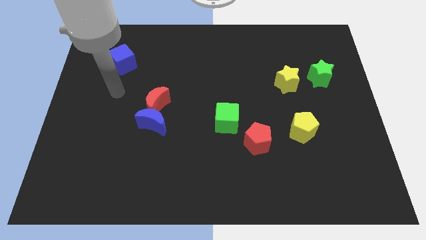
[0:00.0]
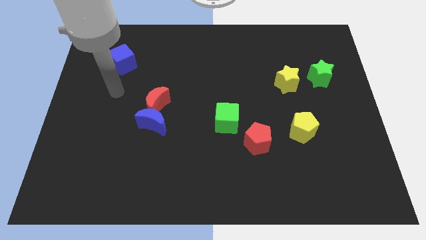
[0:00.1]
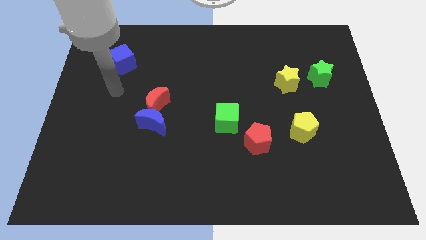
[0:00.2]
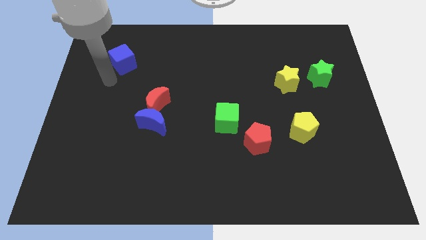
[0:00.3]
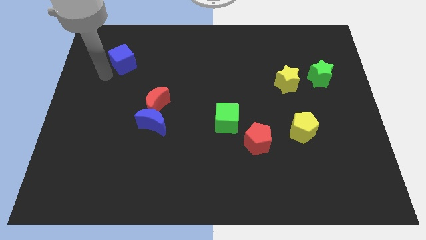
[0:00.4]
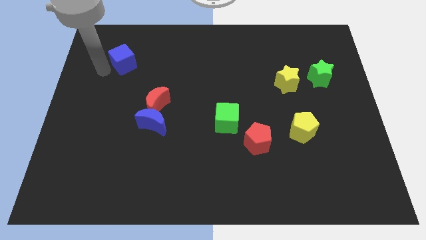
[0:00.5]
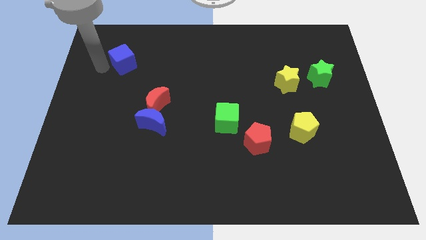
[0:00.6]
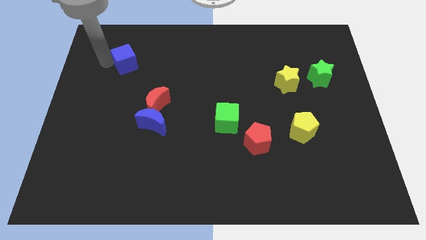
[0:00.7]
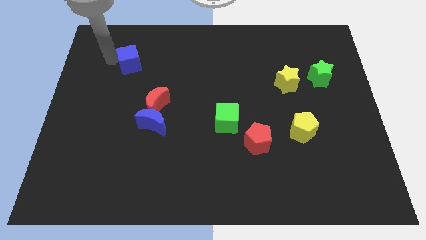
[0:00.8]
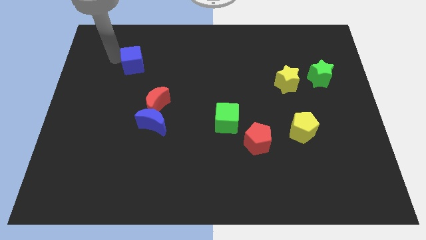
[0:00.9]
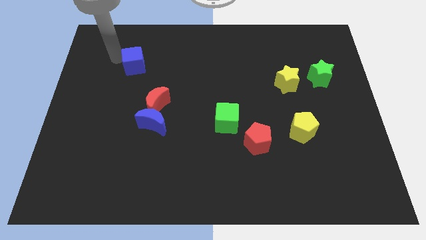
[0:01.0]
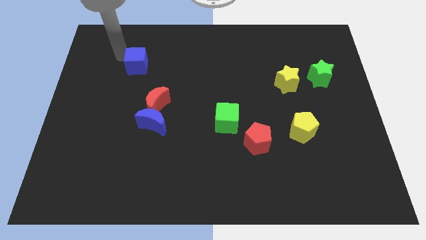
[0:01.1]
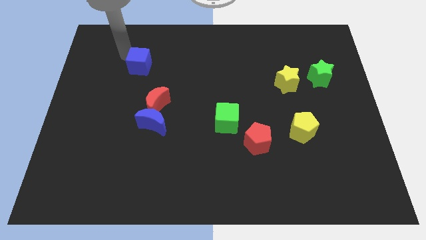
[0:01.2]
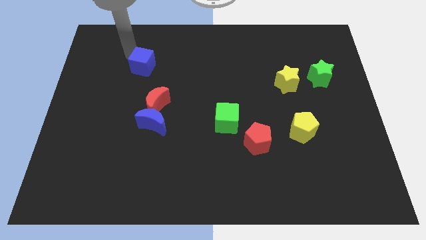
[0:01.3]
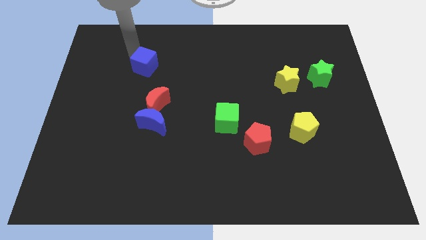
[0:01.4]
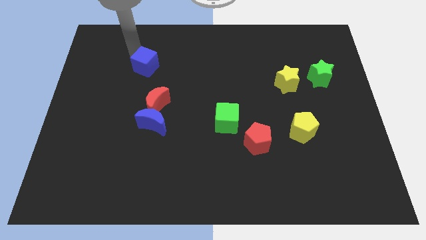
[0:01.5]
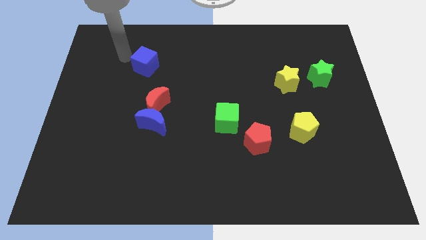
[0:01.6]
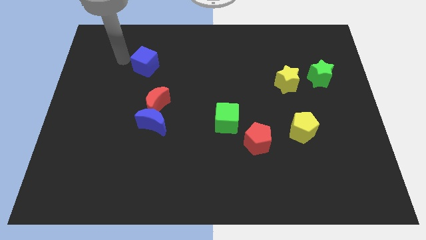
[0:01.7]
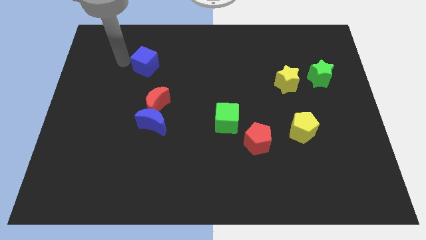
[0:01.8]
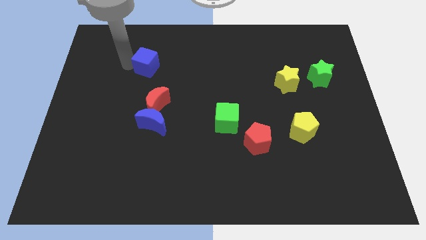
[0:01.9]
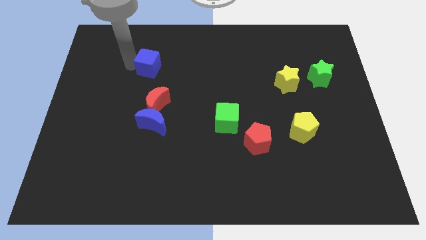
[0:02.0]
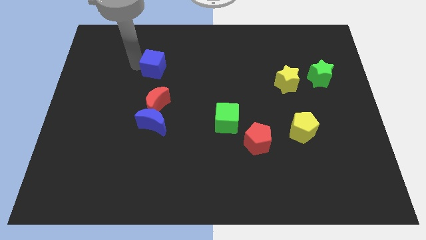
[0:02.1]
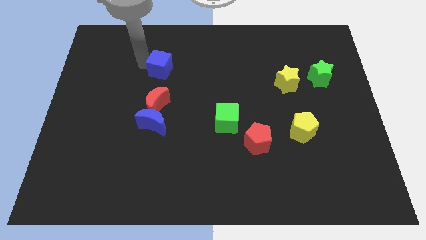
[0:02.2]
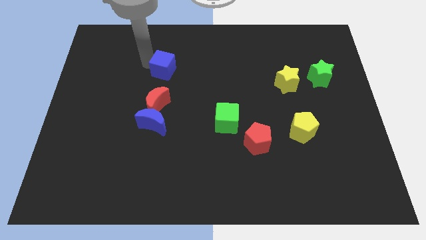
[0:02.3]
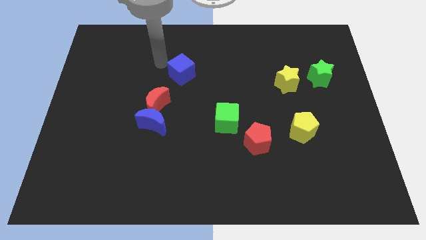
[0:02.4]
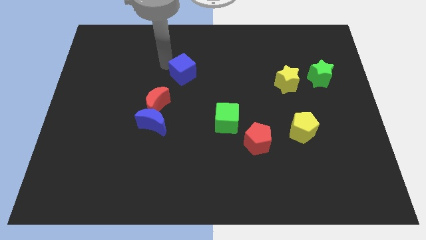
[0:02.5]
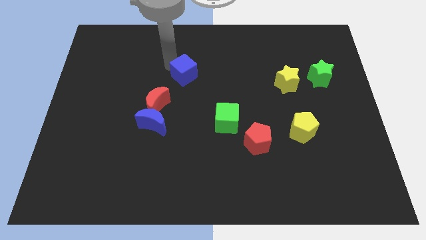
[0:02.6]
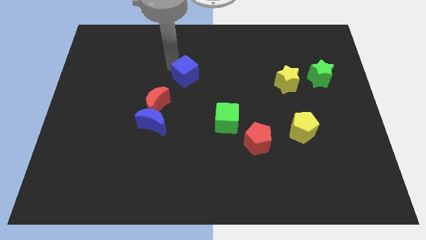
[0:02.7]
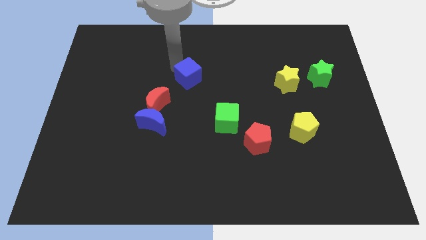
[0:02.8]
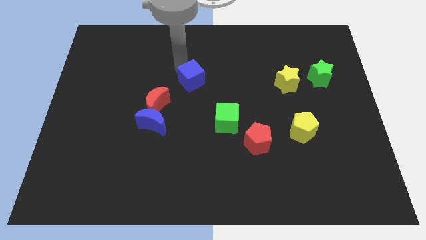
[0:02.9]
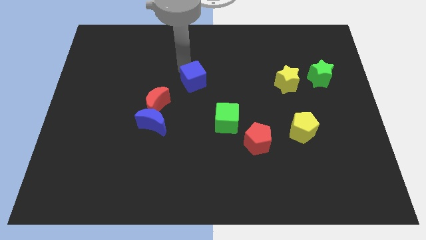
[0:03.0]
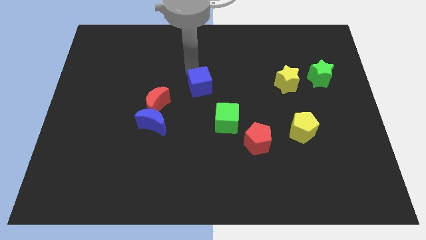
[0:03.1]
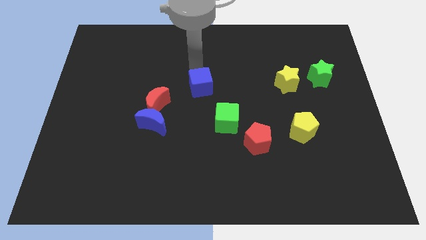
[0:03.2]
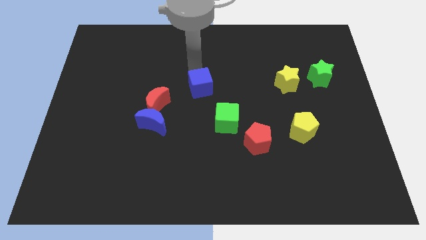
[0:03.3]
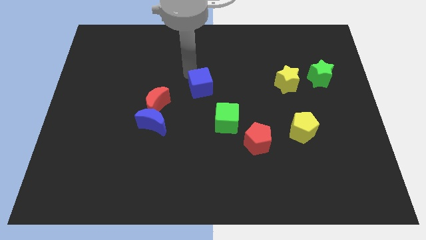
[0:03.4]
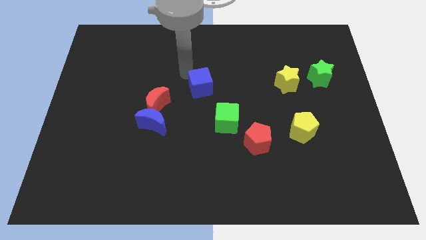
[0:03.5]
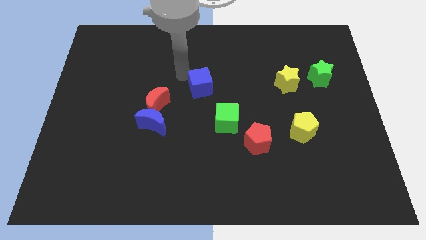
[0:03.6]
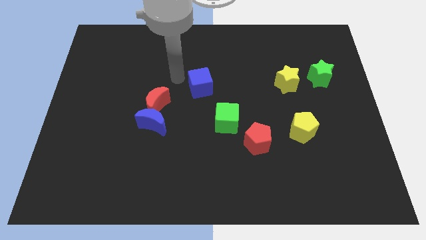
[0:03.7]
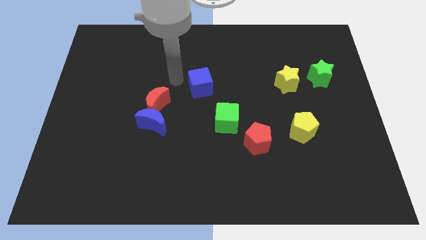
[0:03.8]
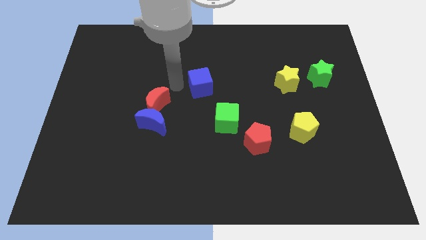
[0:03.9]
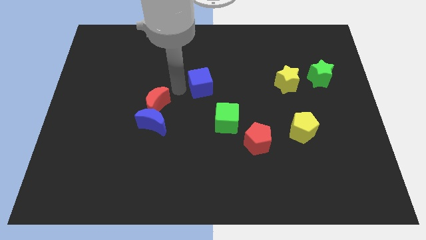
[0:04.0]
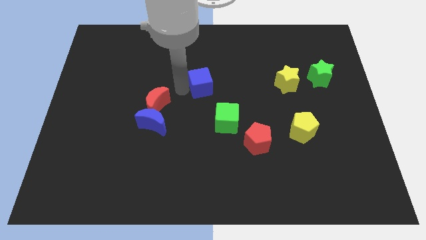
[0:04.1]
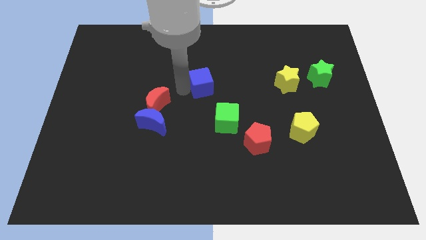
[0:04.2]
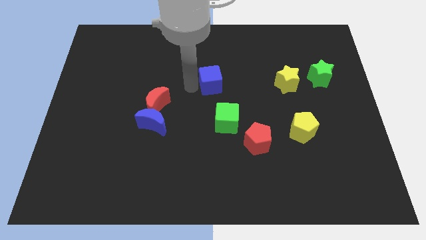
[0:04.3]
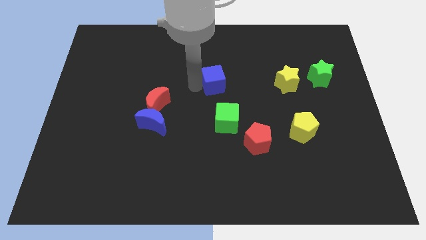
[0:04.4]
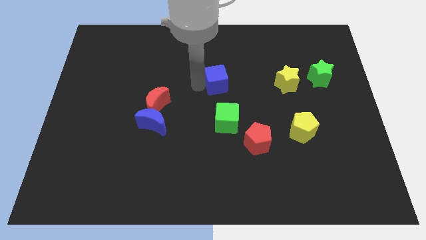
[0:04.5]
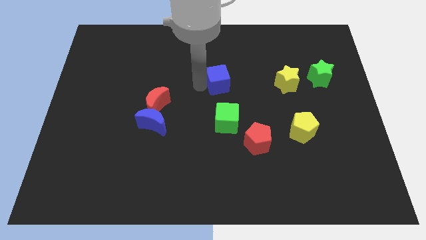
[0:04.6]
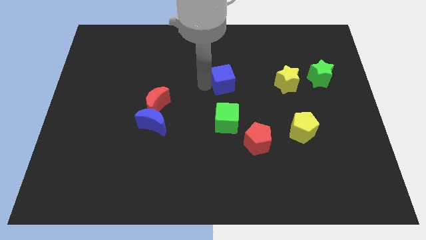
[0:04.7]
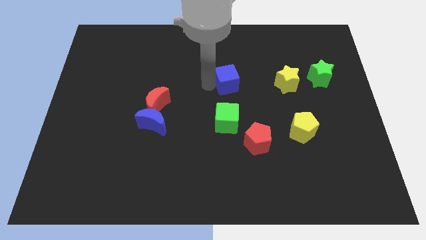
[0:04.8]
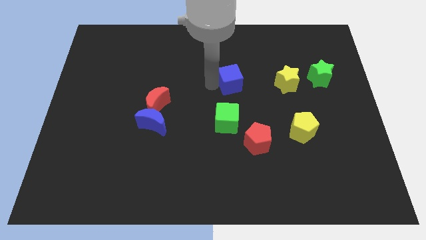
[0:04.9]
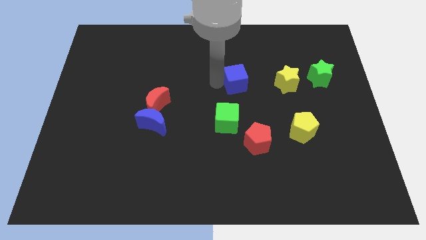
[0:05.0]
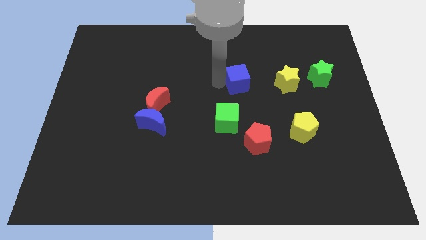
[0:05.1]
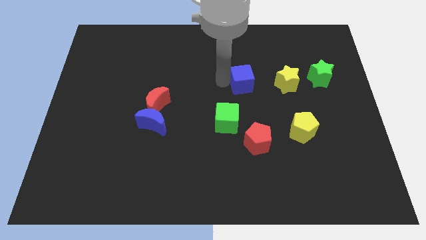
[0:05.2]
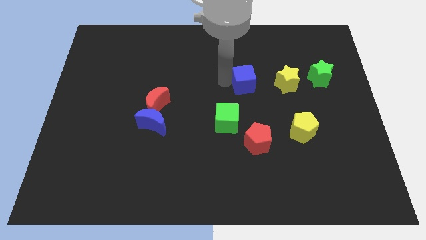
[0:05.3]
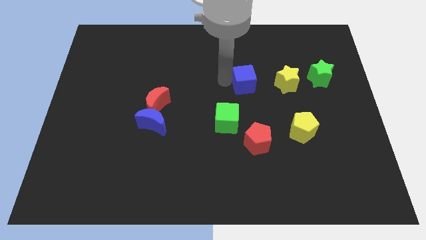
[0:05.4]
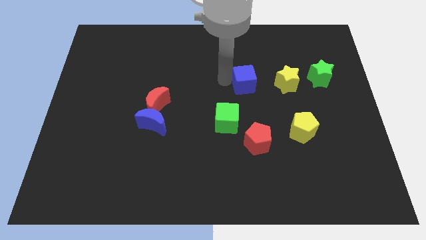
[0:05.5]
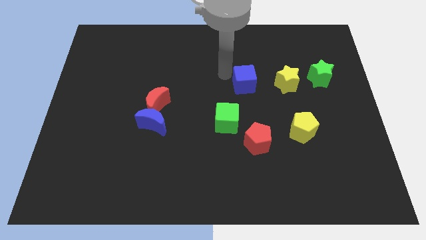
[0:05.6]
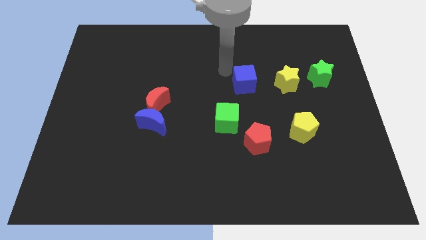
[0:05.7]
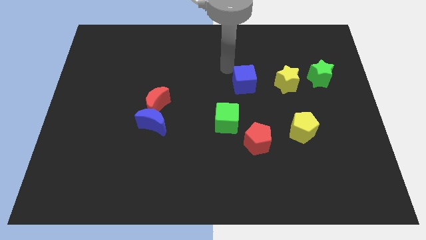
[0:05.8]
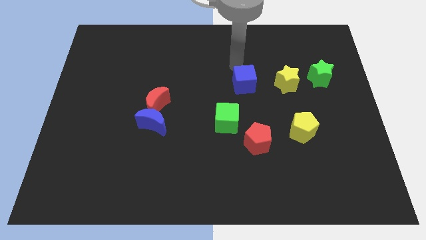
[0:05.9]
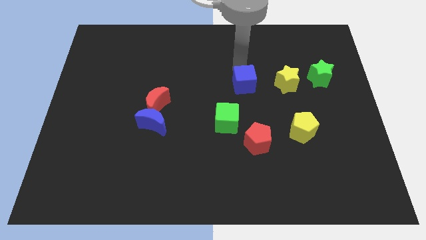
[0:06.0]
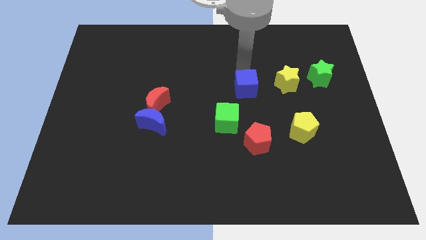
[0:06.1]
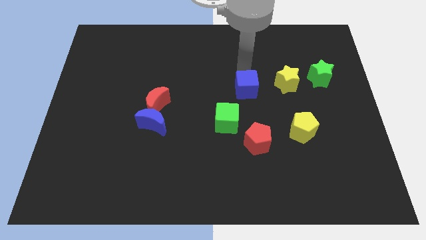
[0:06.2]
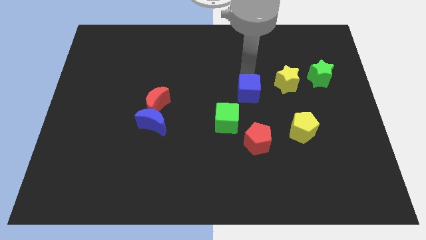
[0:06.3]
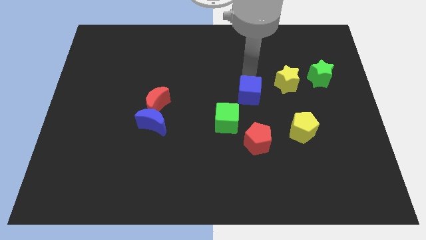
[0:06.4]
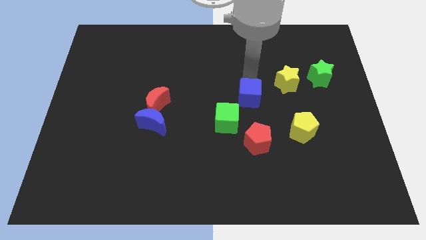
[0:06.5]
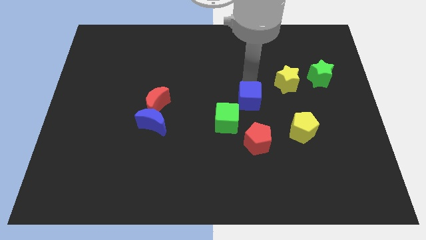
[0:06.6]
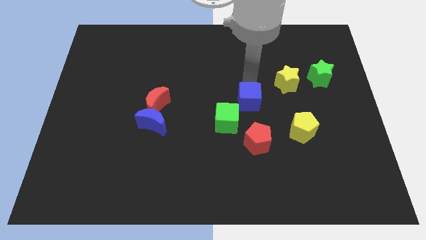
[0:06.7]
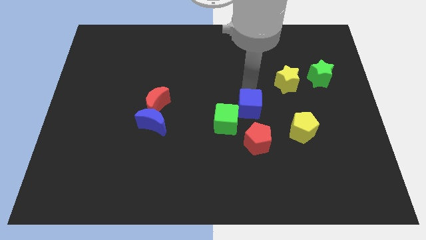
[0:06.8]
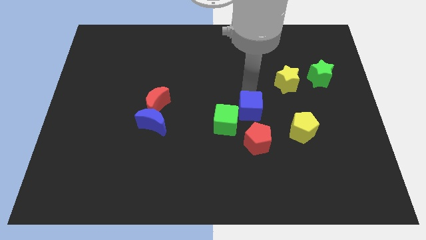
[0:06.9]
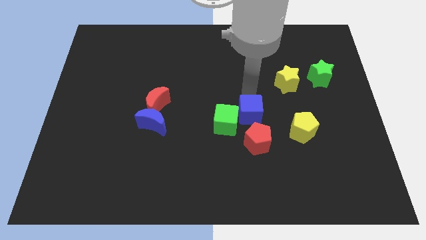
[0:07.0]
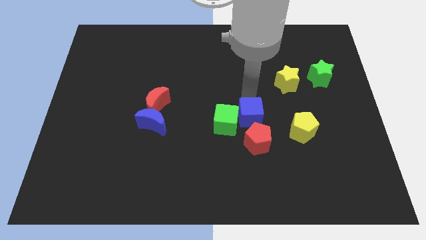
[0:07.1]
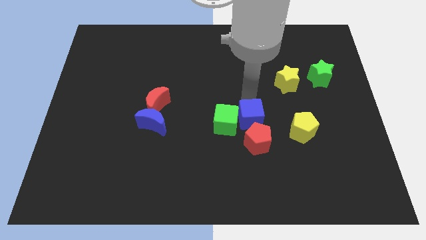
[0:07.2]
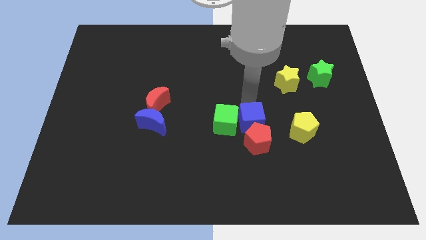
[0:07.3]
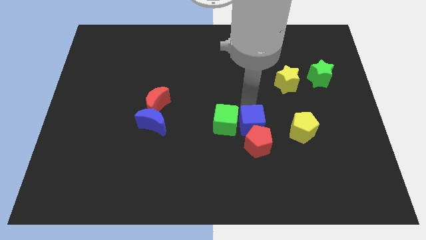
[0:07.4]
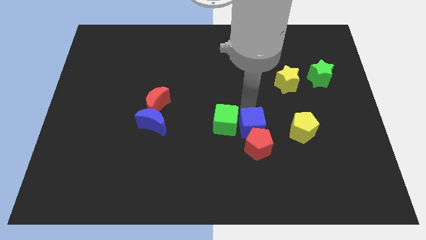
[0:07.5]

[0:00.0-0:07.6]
move the blue cube close to the red pentagon

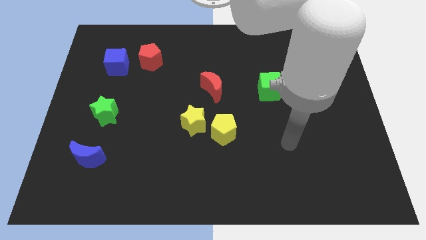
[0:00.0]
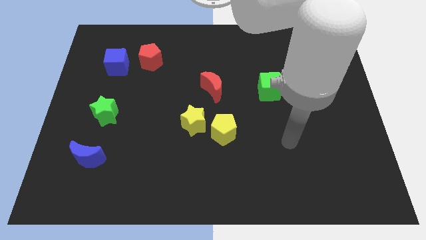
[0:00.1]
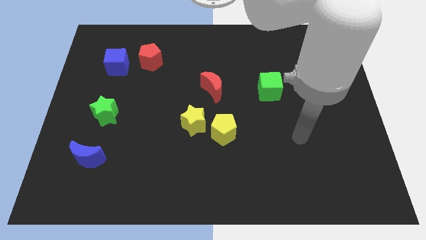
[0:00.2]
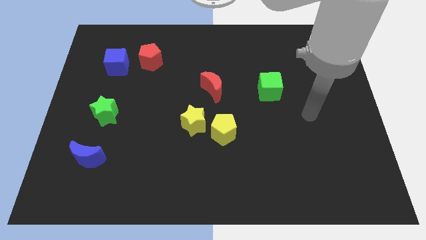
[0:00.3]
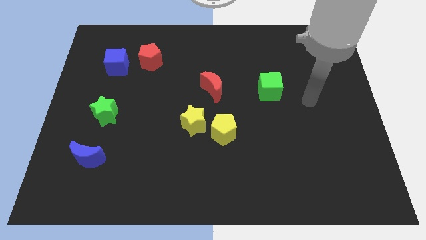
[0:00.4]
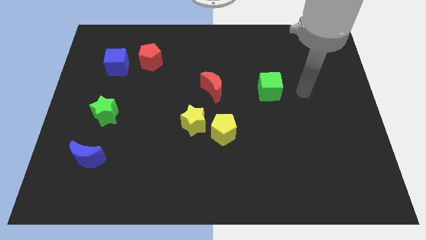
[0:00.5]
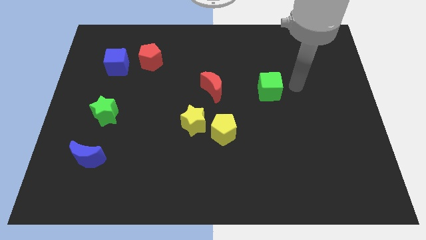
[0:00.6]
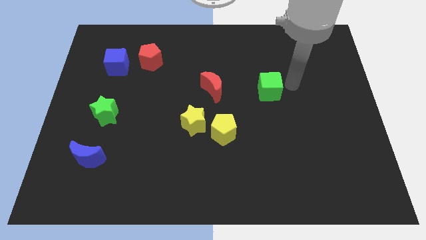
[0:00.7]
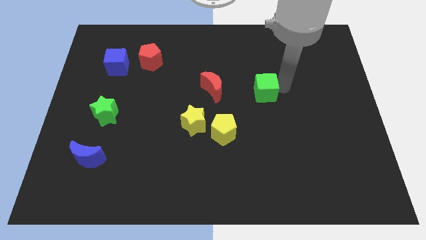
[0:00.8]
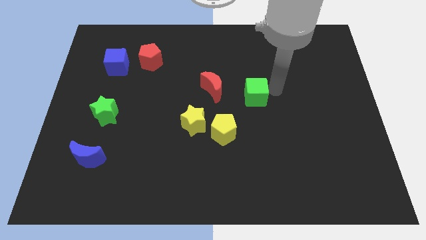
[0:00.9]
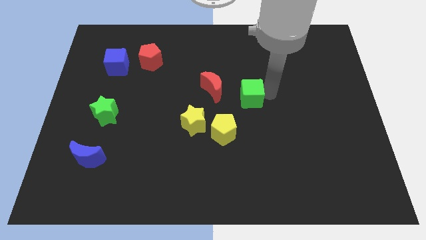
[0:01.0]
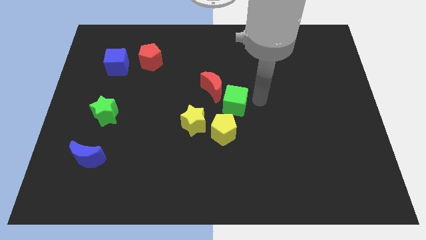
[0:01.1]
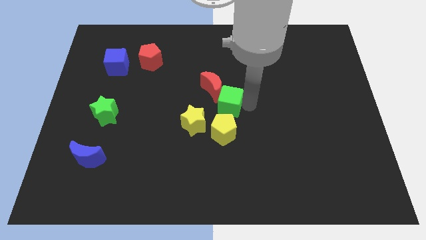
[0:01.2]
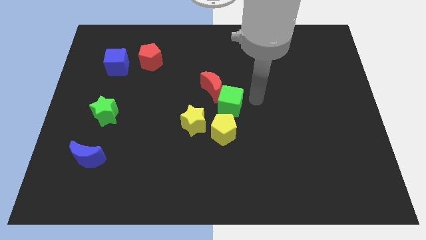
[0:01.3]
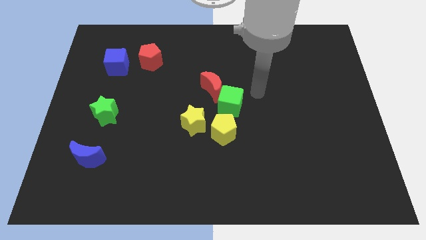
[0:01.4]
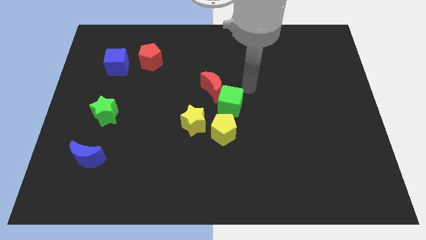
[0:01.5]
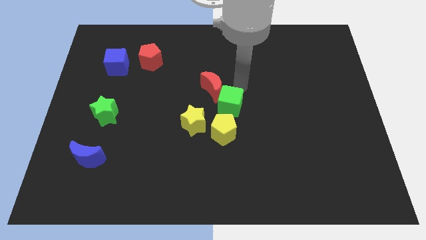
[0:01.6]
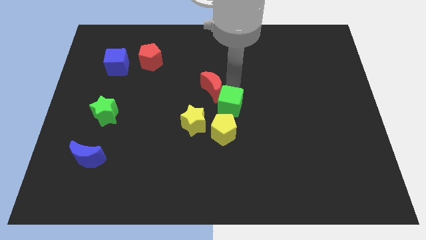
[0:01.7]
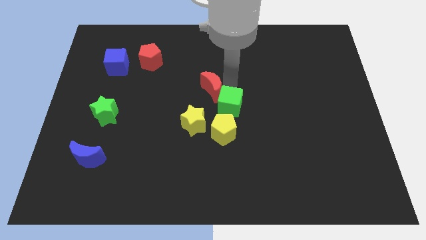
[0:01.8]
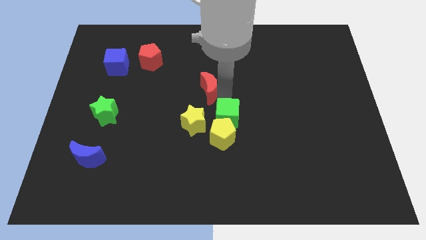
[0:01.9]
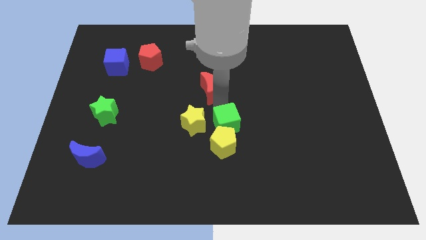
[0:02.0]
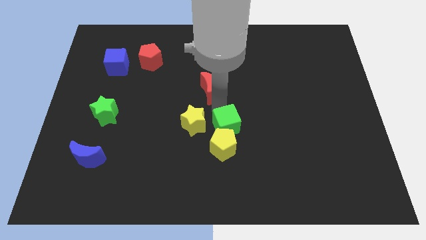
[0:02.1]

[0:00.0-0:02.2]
push the green cube towards the yellow pentagon
